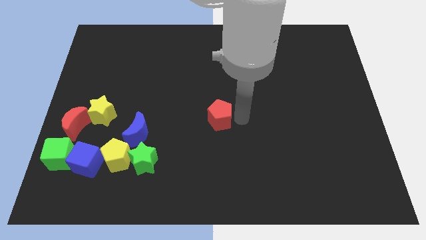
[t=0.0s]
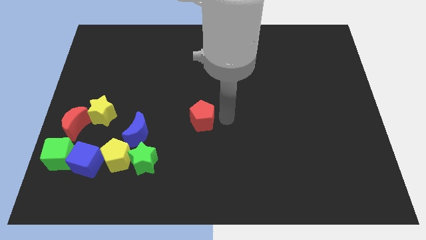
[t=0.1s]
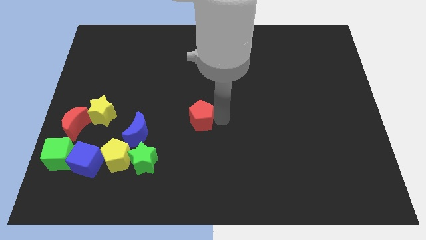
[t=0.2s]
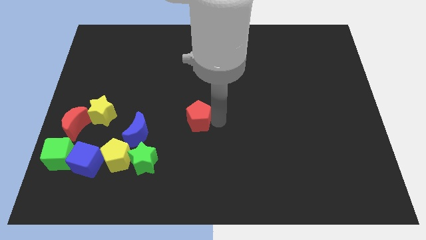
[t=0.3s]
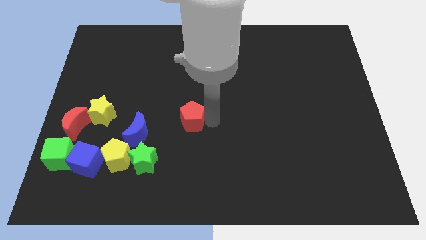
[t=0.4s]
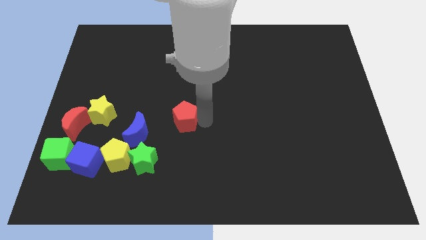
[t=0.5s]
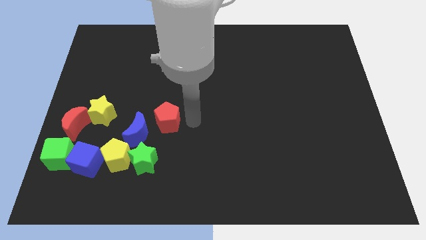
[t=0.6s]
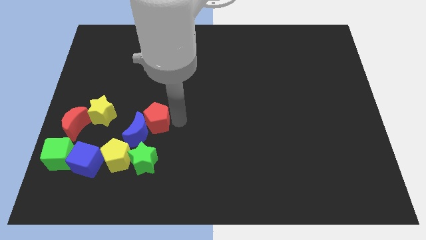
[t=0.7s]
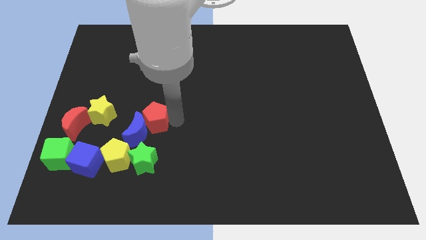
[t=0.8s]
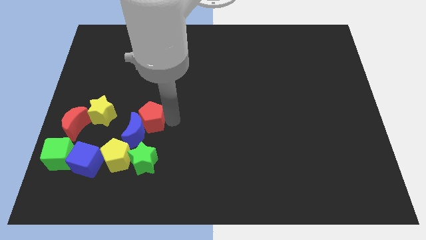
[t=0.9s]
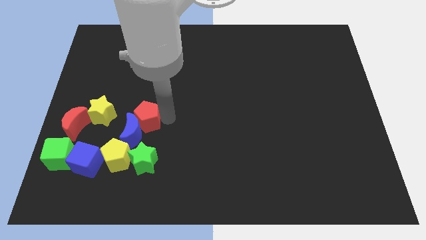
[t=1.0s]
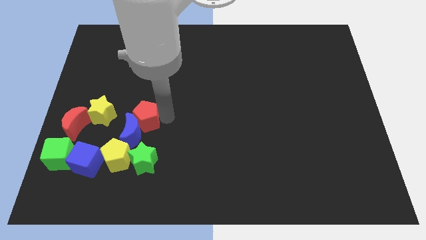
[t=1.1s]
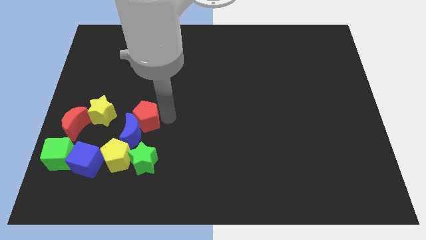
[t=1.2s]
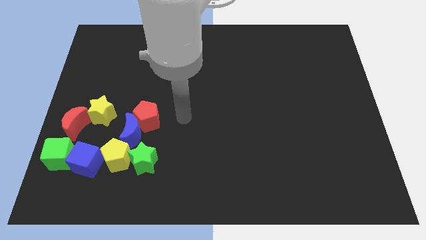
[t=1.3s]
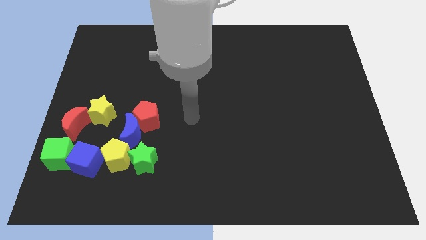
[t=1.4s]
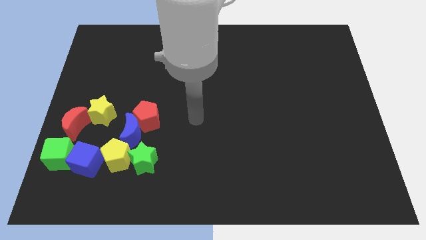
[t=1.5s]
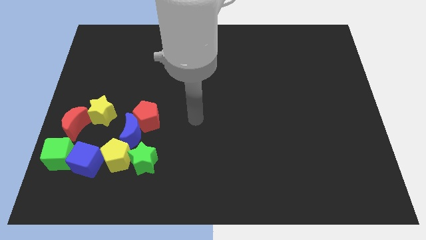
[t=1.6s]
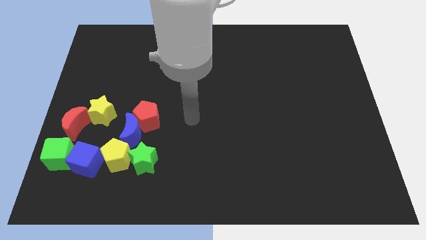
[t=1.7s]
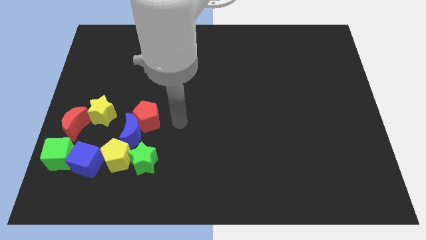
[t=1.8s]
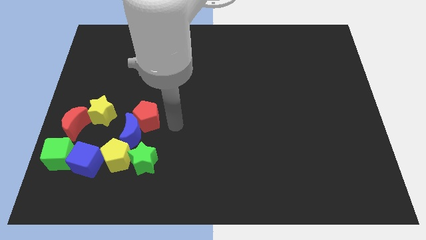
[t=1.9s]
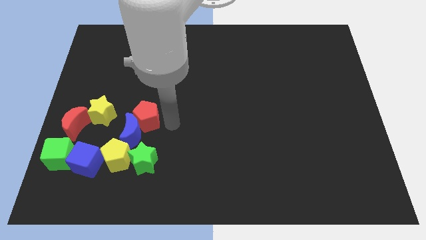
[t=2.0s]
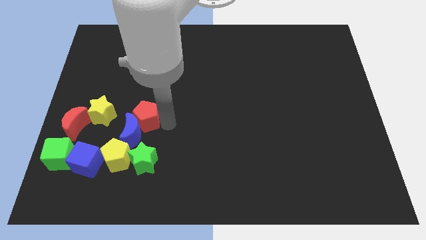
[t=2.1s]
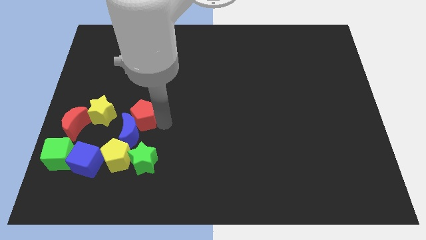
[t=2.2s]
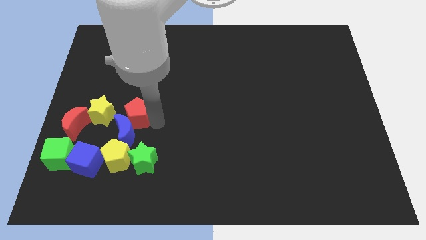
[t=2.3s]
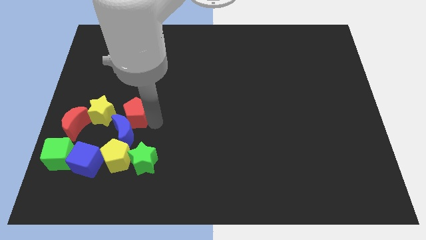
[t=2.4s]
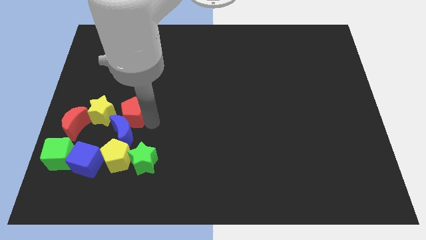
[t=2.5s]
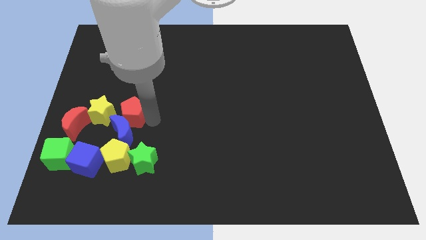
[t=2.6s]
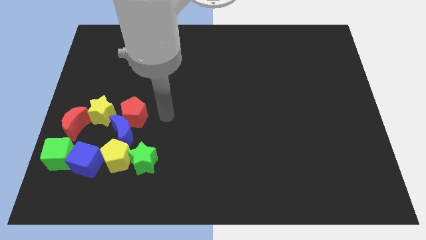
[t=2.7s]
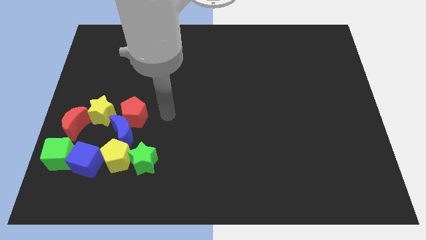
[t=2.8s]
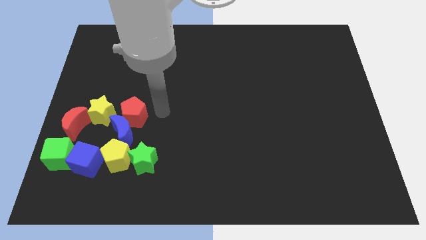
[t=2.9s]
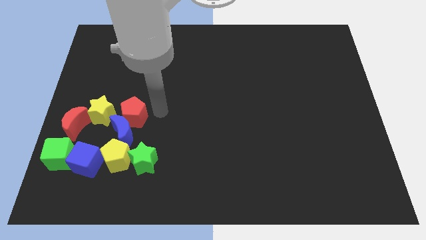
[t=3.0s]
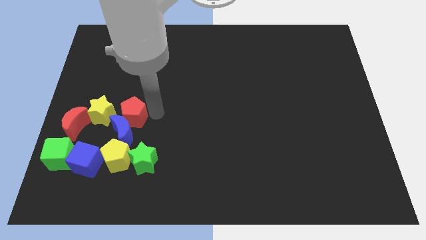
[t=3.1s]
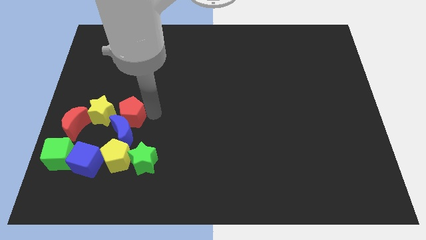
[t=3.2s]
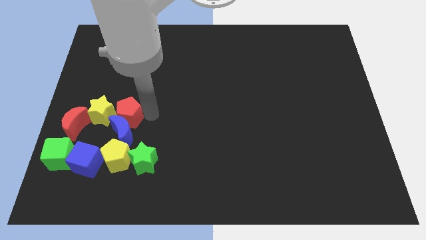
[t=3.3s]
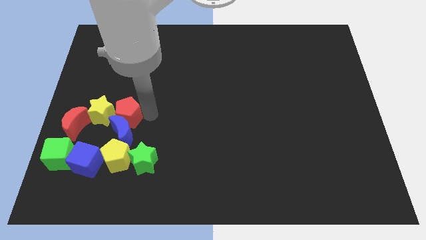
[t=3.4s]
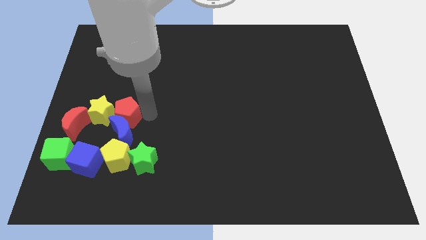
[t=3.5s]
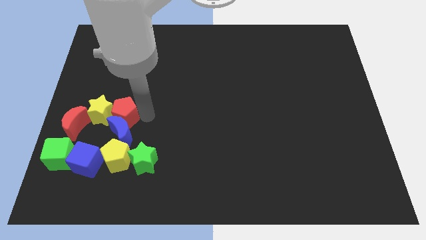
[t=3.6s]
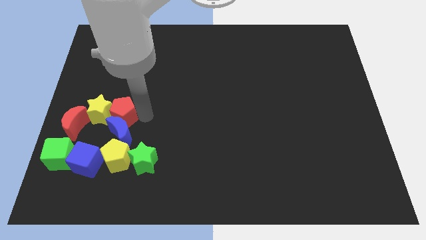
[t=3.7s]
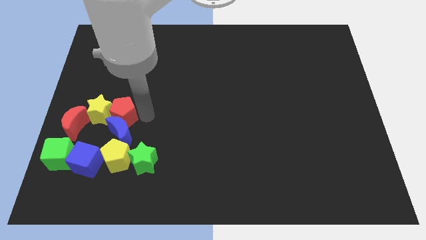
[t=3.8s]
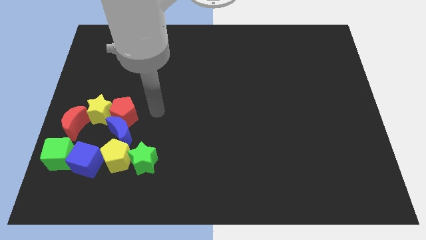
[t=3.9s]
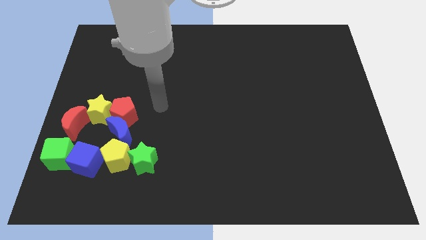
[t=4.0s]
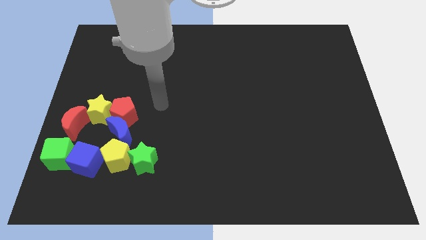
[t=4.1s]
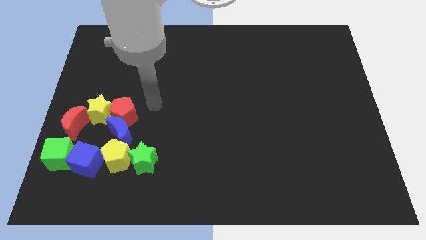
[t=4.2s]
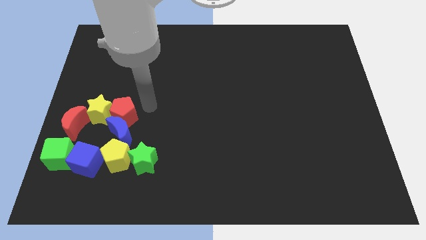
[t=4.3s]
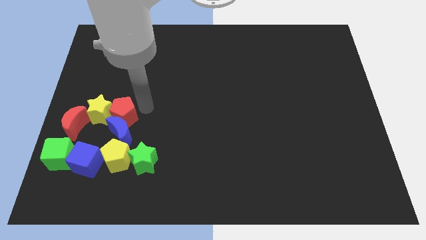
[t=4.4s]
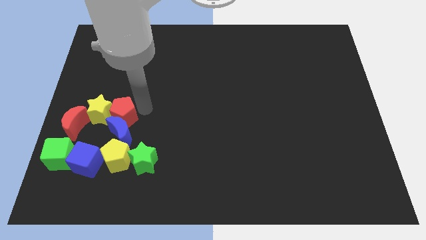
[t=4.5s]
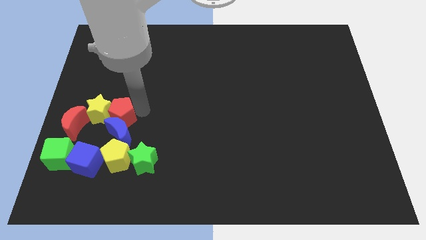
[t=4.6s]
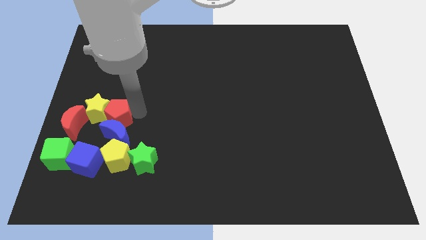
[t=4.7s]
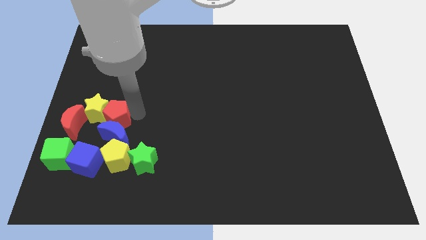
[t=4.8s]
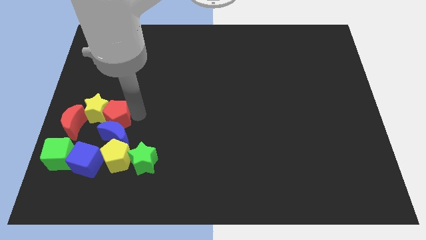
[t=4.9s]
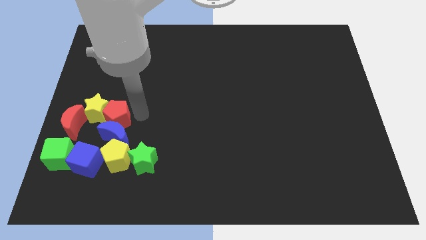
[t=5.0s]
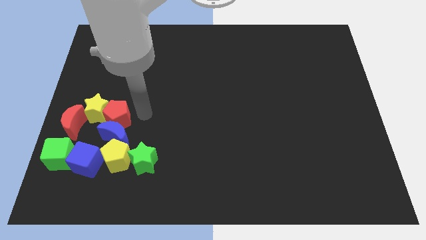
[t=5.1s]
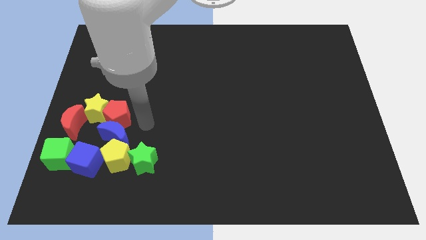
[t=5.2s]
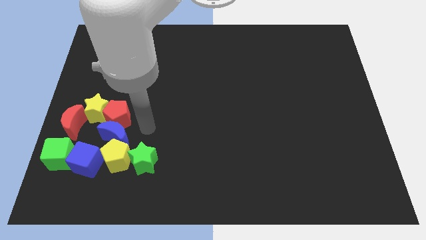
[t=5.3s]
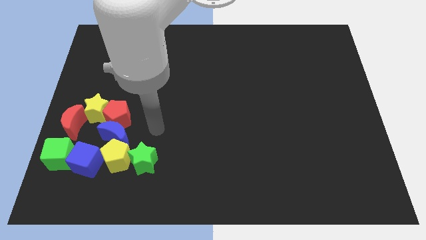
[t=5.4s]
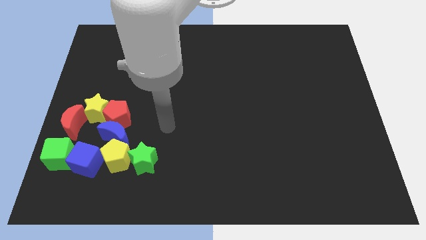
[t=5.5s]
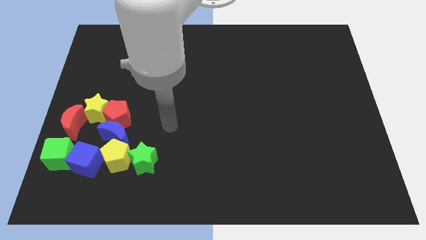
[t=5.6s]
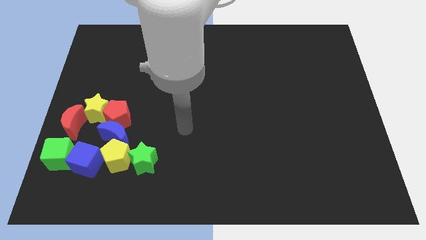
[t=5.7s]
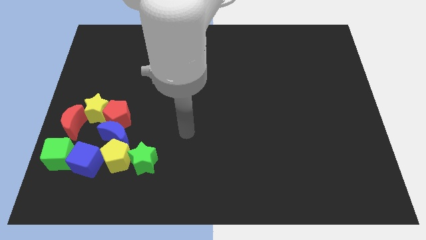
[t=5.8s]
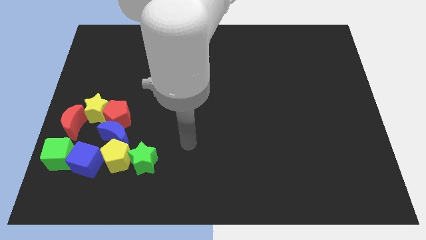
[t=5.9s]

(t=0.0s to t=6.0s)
move the red pentagon into the yellow star

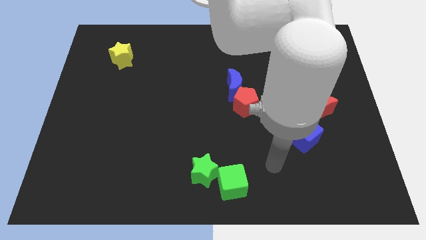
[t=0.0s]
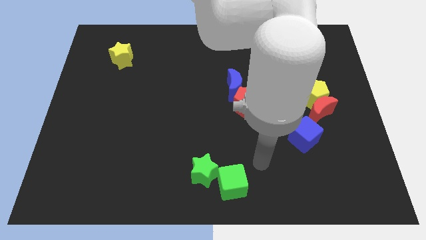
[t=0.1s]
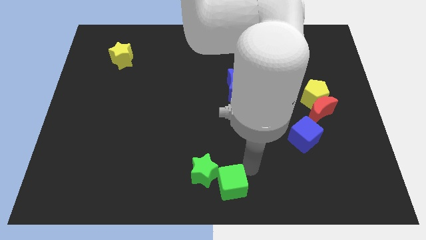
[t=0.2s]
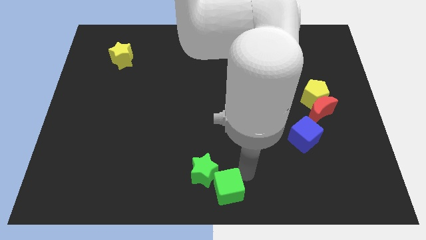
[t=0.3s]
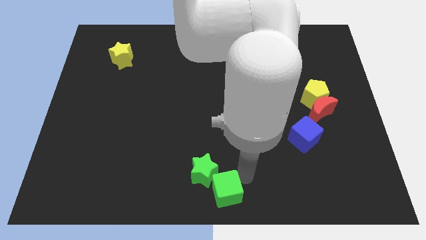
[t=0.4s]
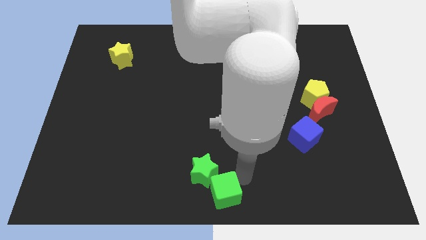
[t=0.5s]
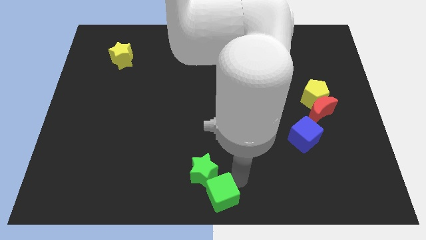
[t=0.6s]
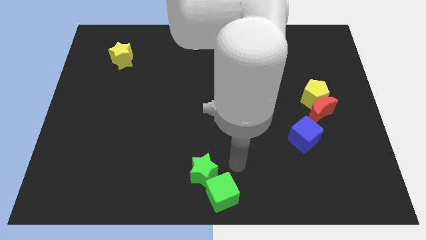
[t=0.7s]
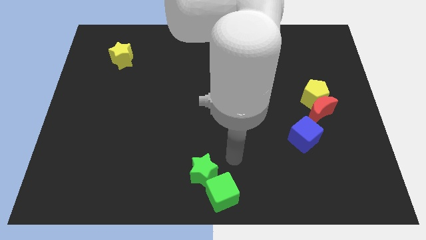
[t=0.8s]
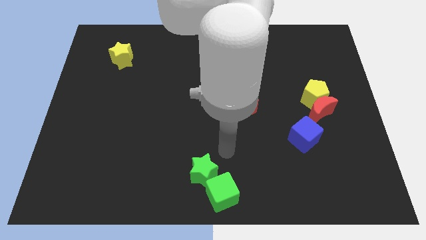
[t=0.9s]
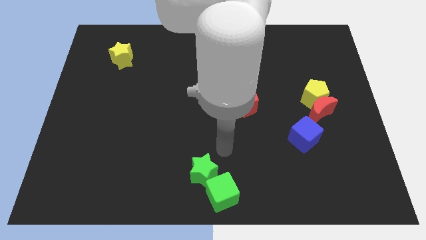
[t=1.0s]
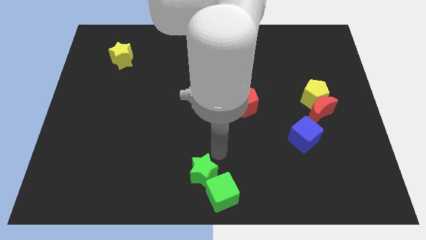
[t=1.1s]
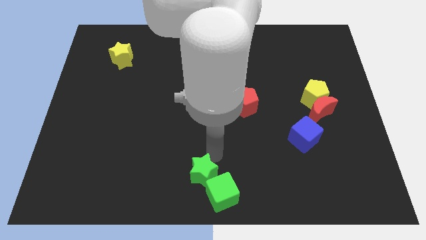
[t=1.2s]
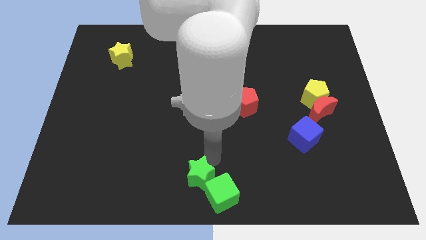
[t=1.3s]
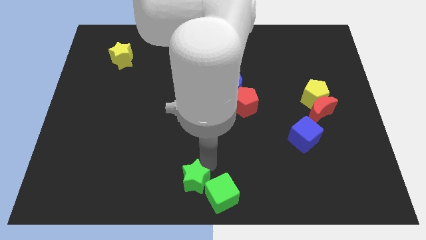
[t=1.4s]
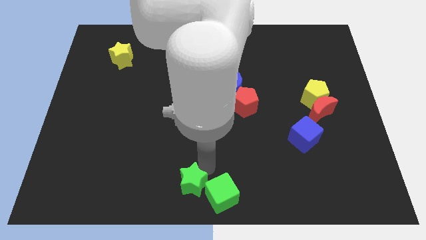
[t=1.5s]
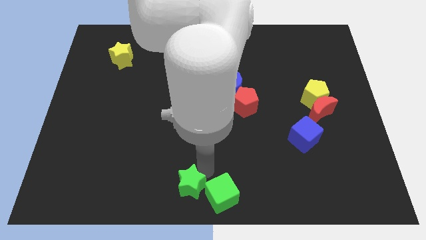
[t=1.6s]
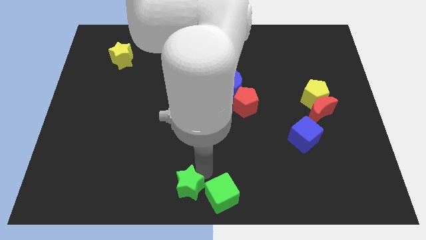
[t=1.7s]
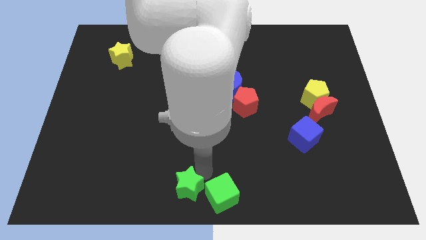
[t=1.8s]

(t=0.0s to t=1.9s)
move the green star and the green cube towards the bottom center of the board

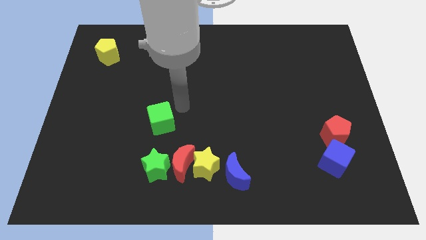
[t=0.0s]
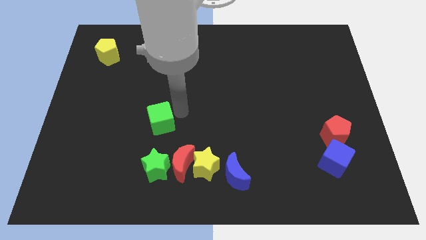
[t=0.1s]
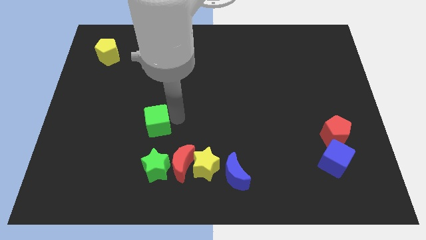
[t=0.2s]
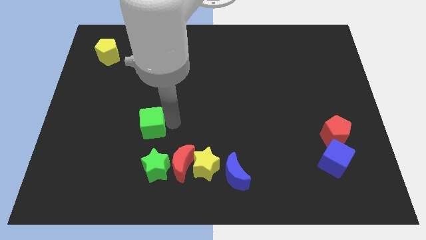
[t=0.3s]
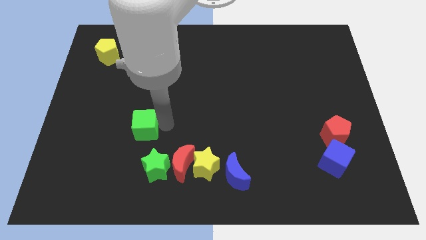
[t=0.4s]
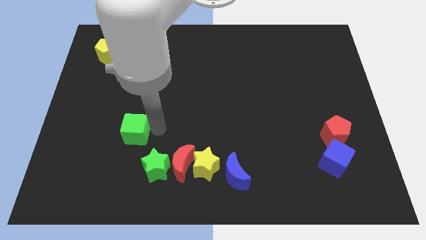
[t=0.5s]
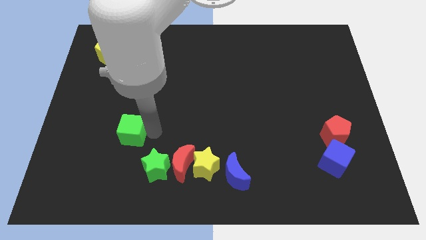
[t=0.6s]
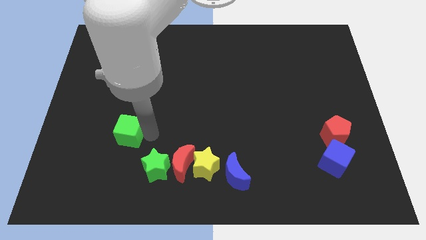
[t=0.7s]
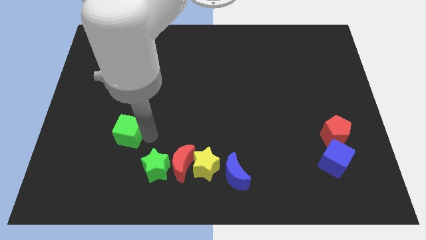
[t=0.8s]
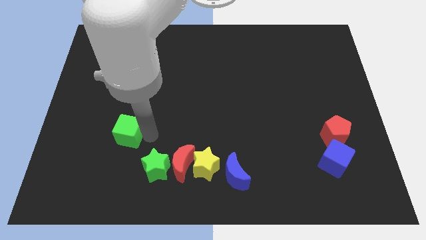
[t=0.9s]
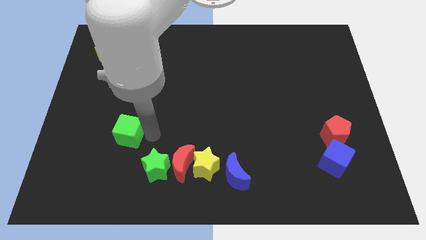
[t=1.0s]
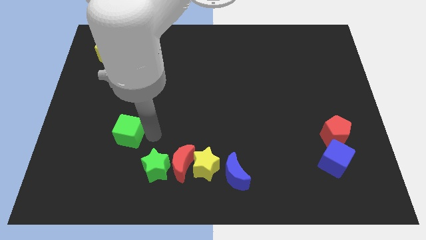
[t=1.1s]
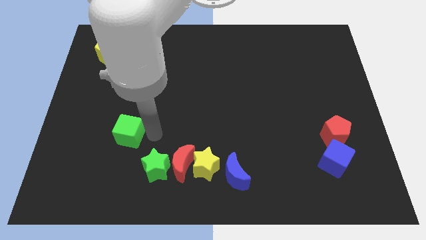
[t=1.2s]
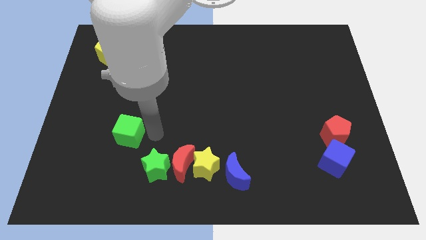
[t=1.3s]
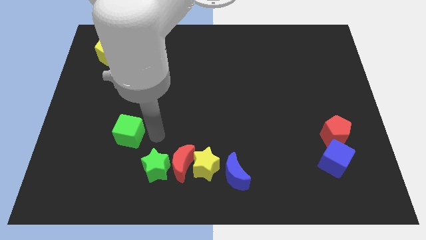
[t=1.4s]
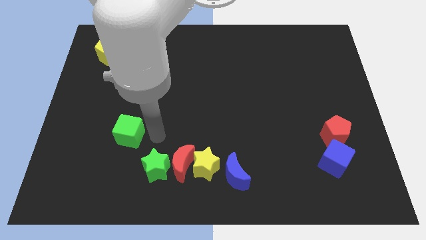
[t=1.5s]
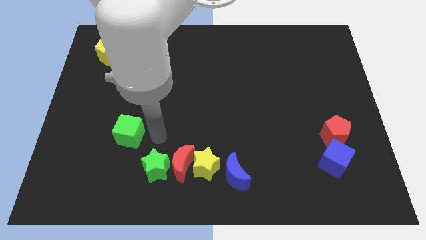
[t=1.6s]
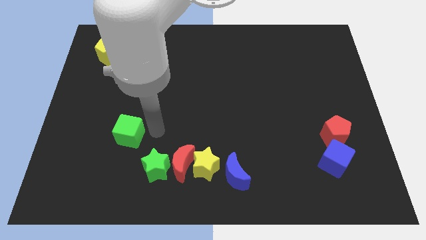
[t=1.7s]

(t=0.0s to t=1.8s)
place the green cube to the top left of the green star
